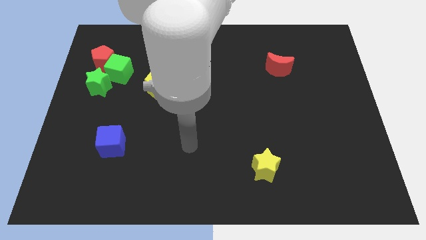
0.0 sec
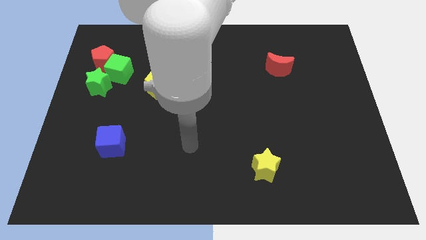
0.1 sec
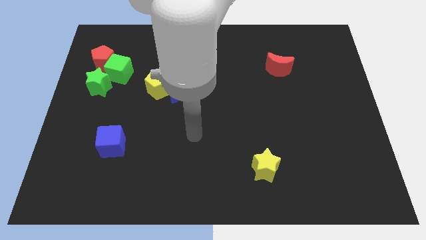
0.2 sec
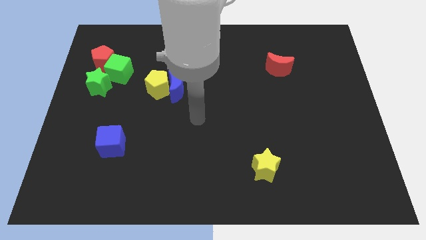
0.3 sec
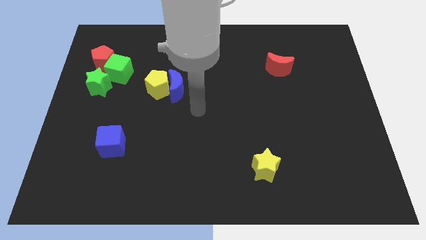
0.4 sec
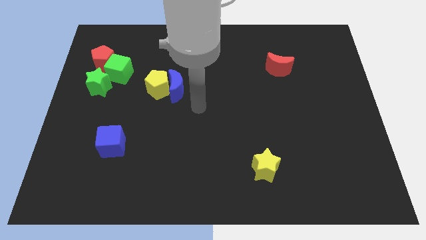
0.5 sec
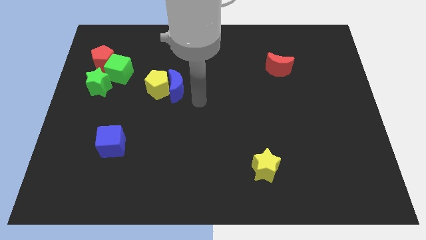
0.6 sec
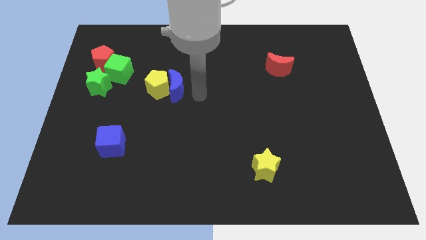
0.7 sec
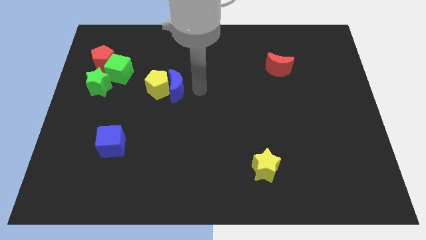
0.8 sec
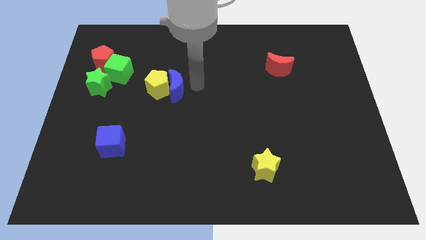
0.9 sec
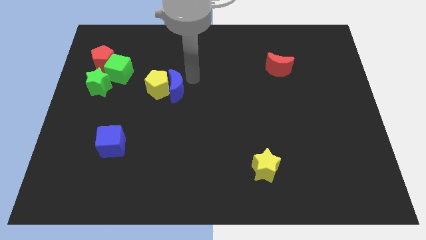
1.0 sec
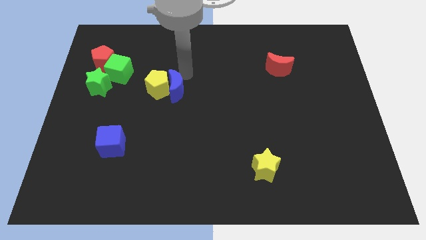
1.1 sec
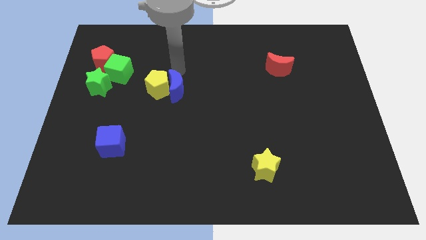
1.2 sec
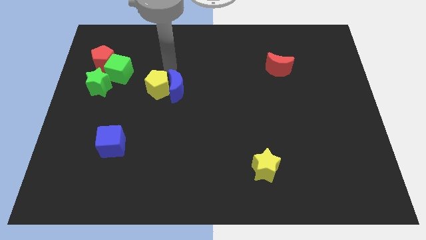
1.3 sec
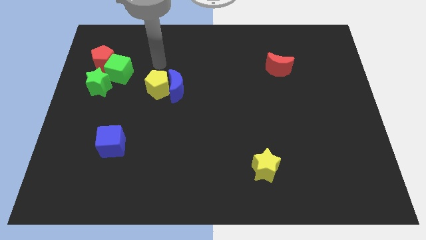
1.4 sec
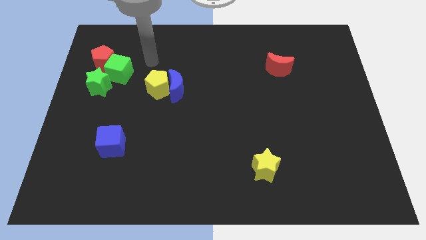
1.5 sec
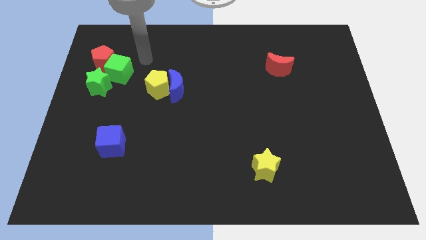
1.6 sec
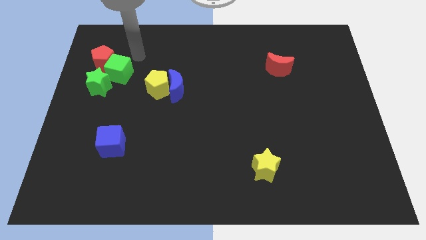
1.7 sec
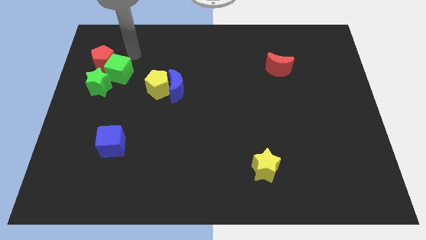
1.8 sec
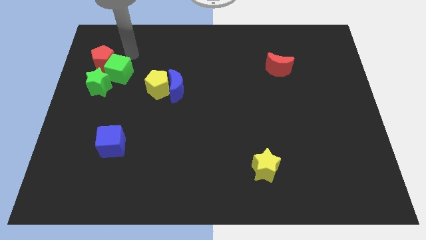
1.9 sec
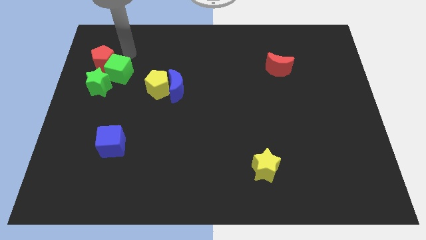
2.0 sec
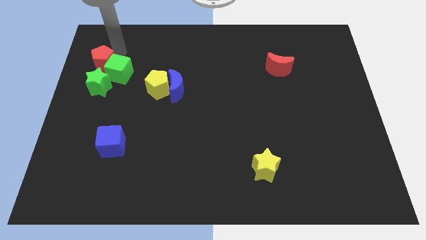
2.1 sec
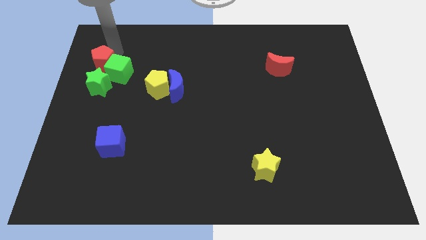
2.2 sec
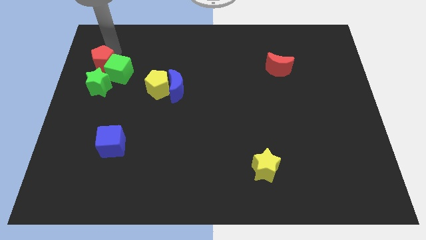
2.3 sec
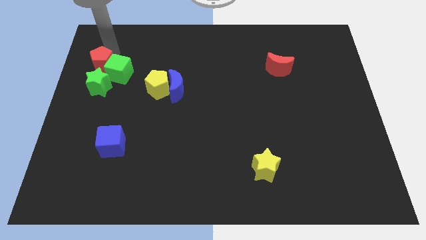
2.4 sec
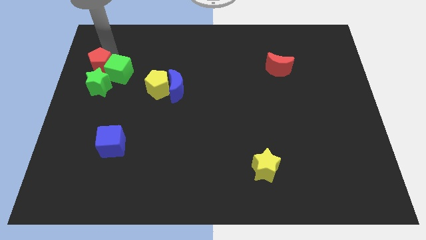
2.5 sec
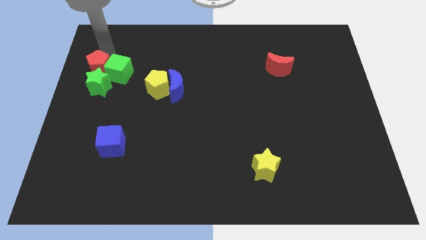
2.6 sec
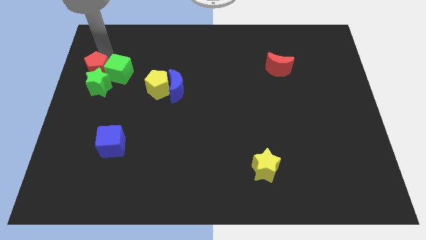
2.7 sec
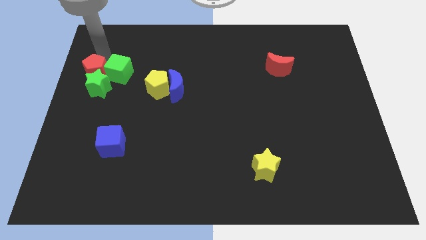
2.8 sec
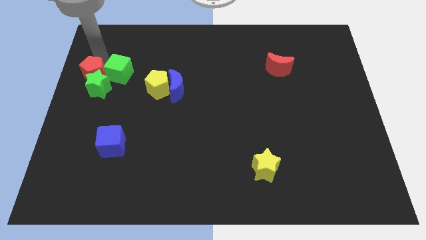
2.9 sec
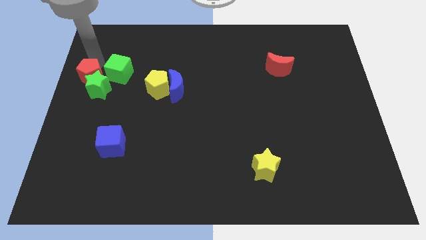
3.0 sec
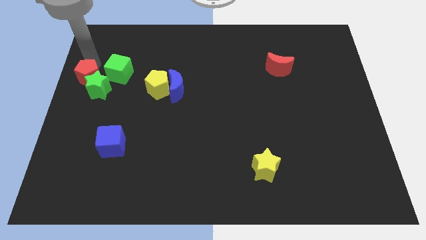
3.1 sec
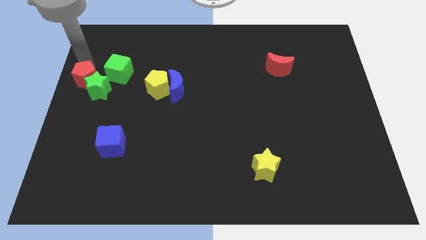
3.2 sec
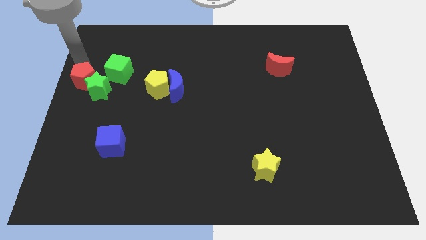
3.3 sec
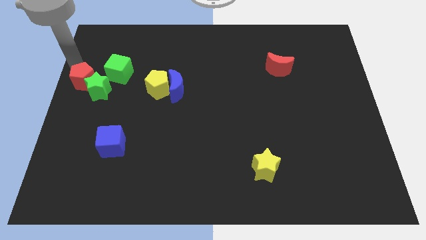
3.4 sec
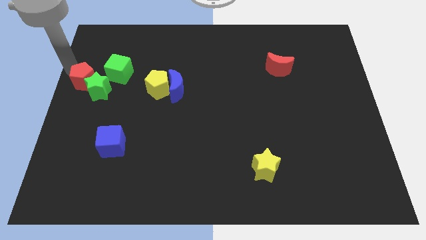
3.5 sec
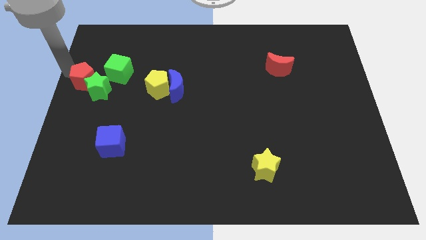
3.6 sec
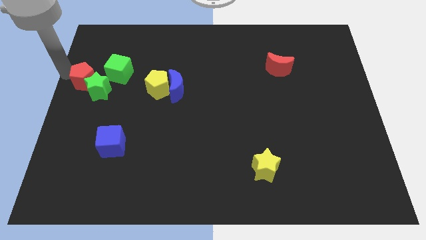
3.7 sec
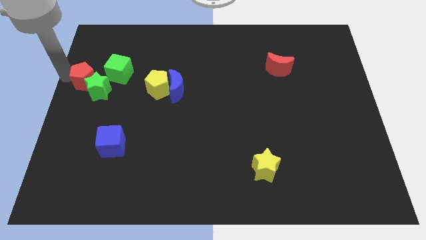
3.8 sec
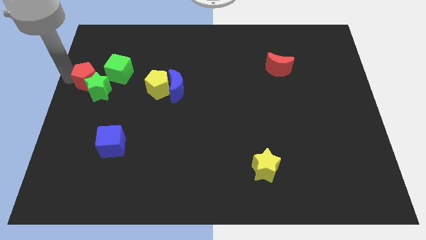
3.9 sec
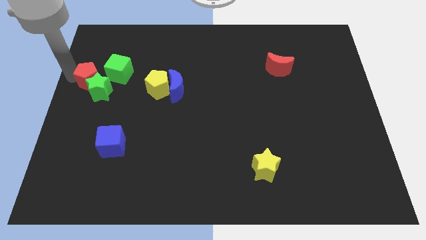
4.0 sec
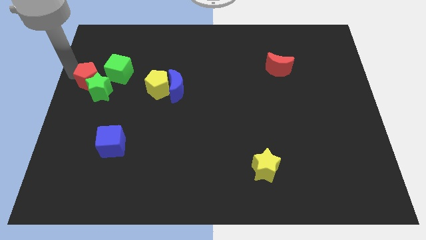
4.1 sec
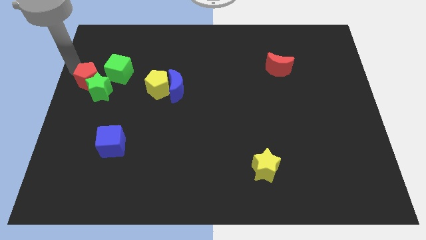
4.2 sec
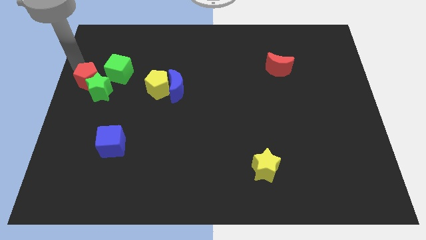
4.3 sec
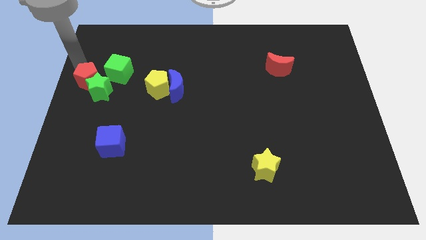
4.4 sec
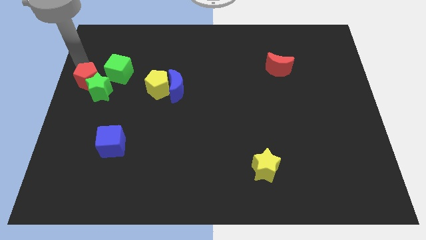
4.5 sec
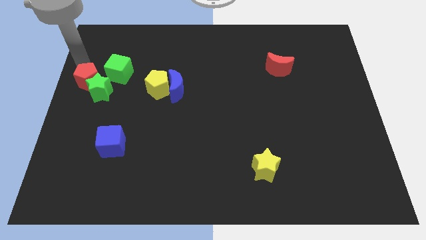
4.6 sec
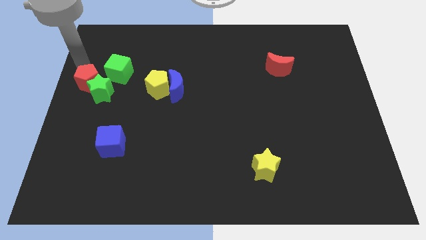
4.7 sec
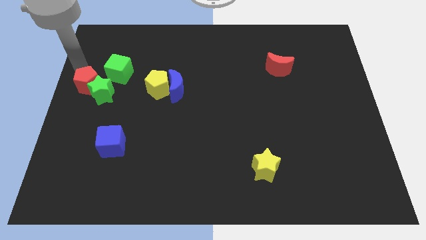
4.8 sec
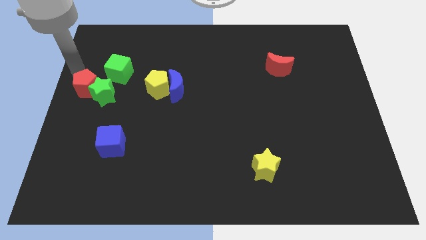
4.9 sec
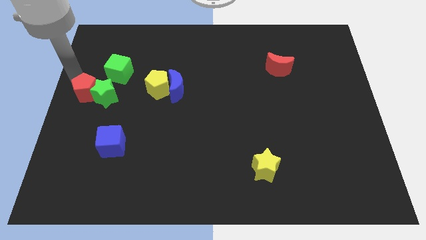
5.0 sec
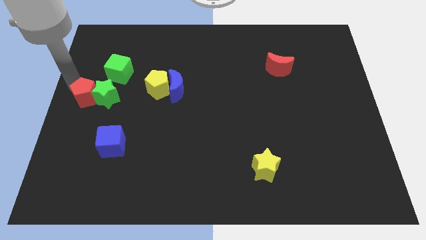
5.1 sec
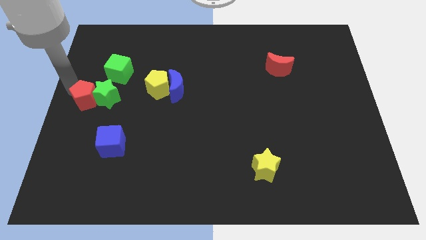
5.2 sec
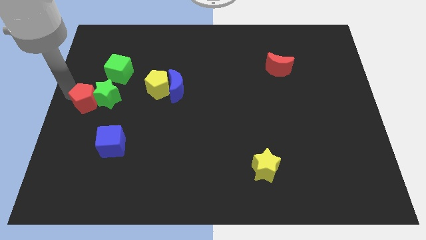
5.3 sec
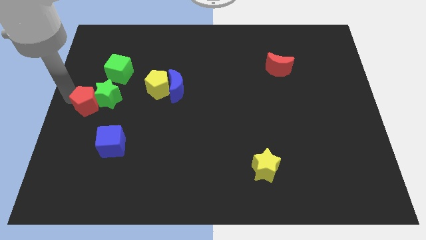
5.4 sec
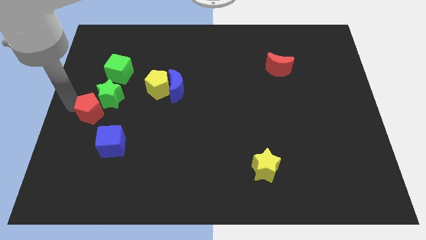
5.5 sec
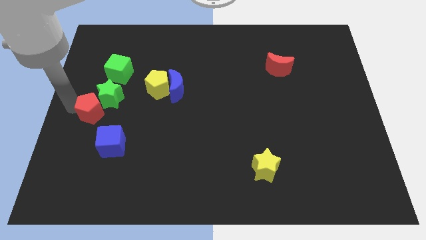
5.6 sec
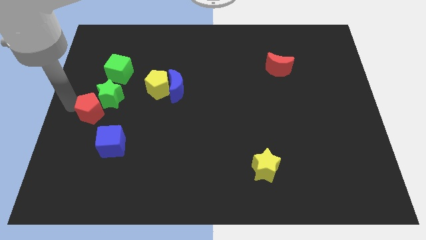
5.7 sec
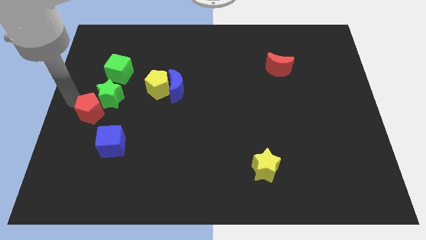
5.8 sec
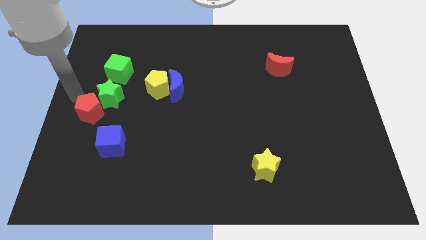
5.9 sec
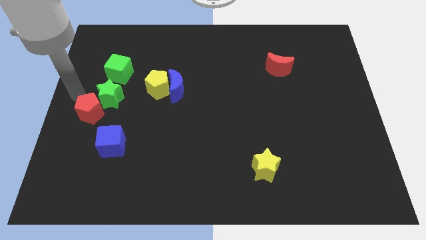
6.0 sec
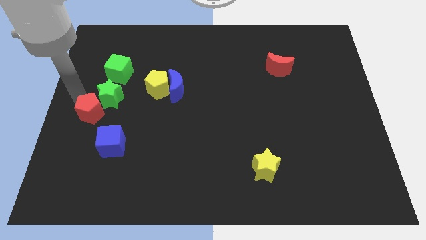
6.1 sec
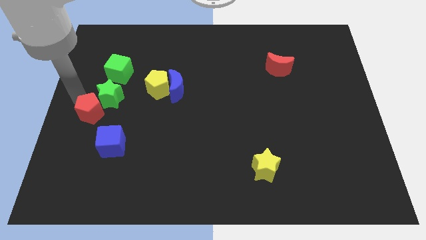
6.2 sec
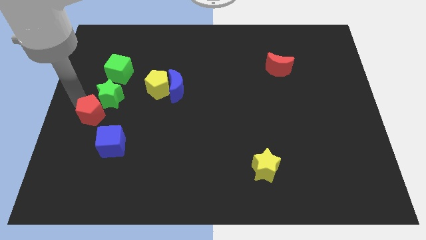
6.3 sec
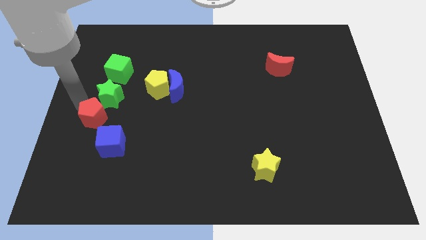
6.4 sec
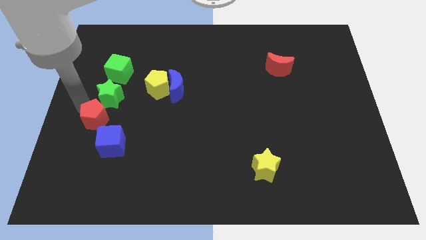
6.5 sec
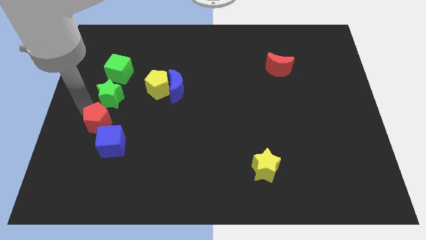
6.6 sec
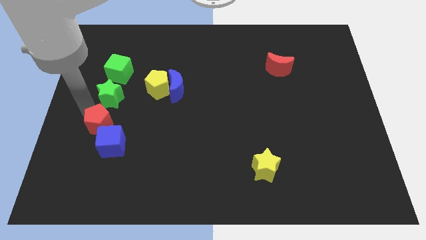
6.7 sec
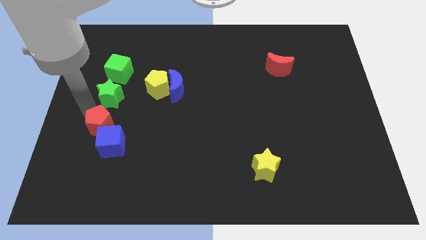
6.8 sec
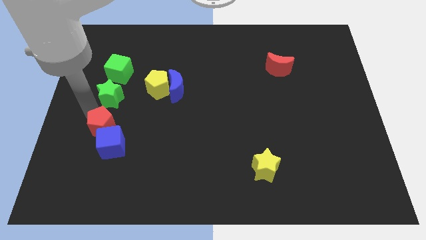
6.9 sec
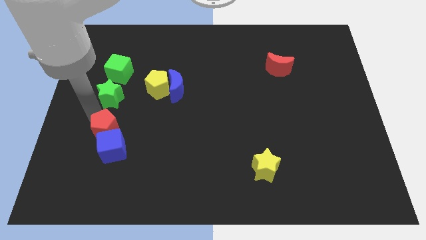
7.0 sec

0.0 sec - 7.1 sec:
push the red pentagon towards the blue cube

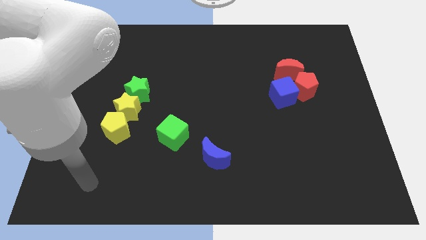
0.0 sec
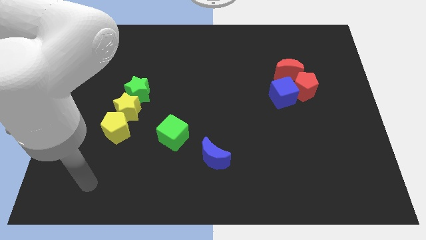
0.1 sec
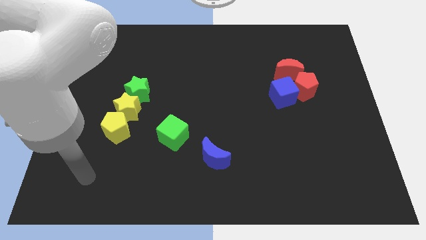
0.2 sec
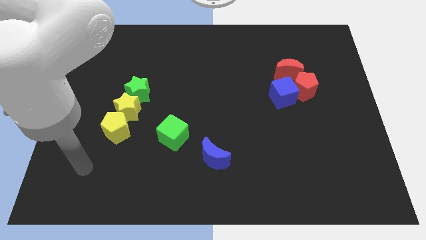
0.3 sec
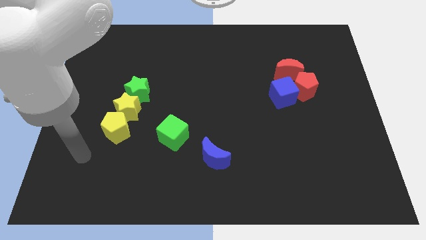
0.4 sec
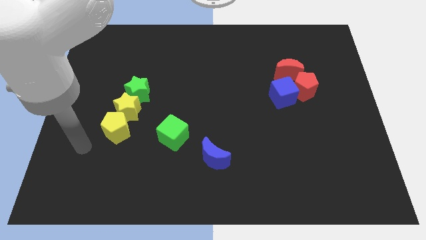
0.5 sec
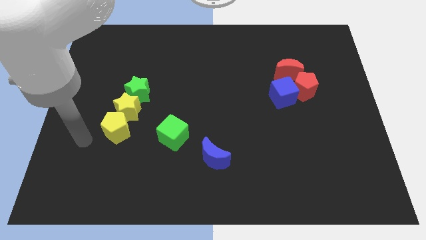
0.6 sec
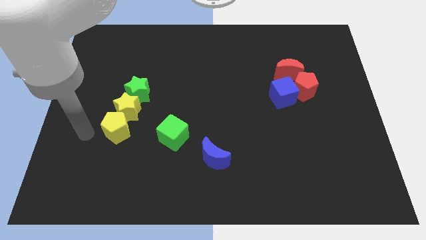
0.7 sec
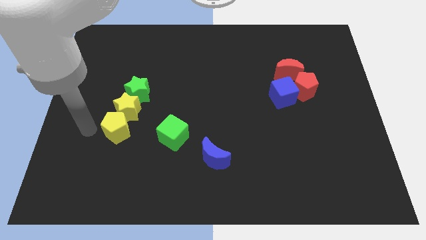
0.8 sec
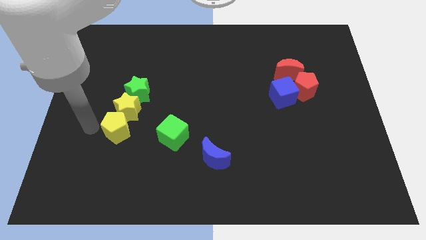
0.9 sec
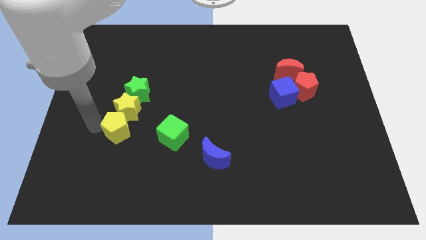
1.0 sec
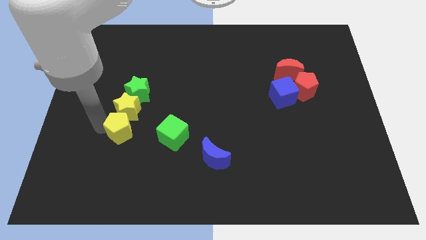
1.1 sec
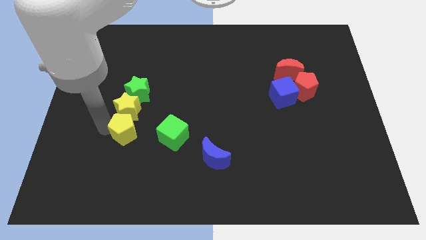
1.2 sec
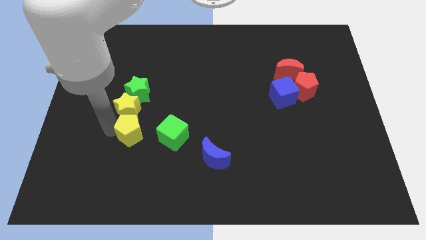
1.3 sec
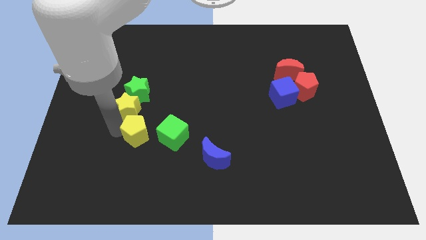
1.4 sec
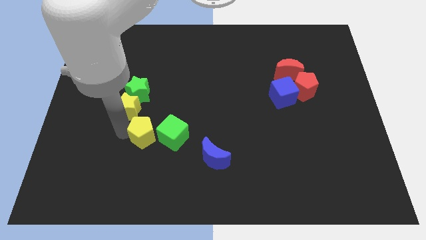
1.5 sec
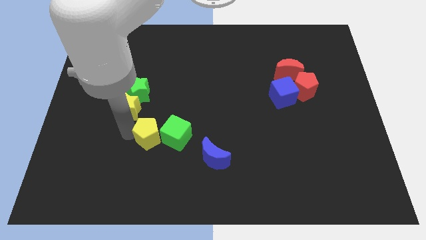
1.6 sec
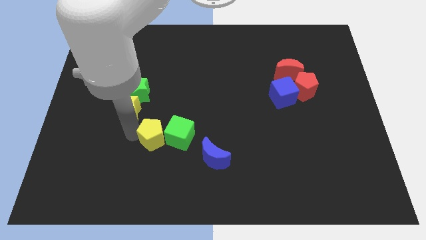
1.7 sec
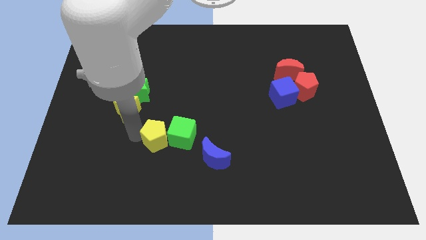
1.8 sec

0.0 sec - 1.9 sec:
put the yellow pentagon close to the green cube
